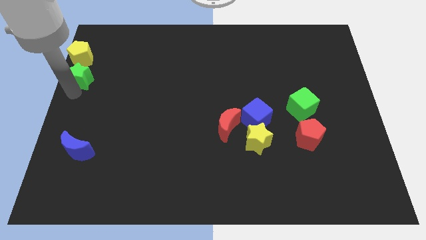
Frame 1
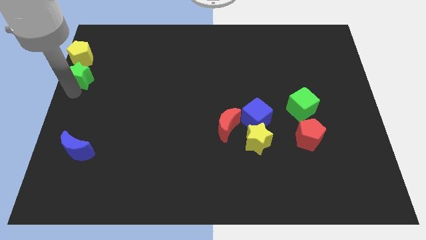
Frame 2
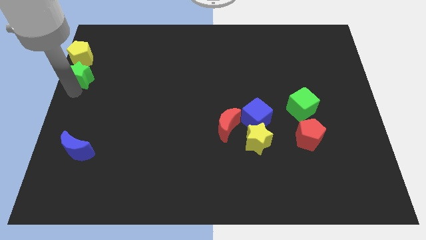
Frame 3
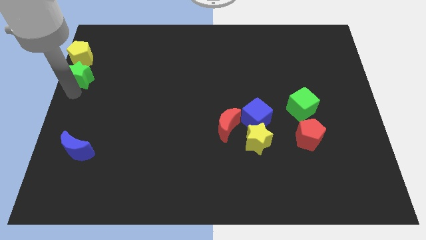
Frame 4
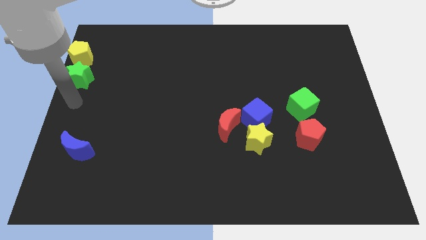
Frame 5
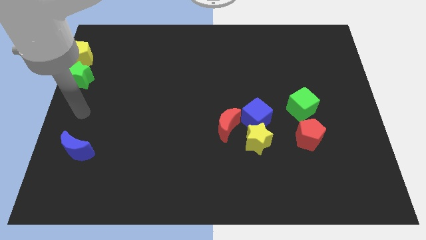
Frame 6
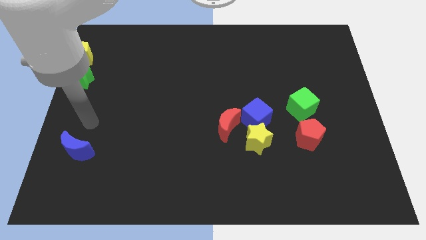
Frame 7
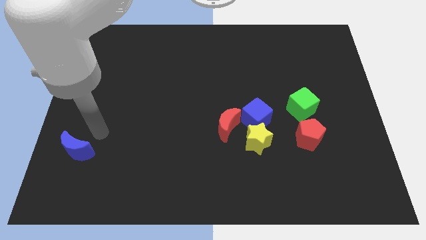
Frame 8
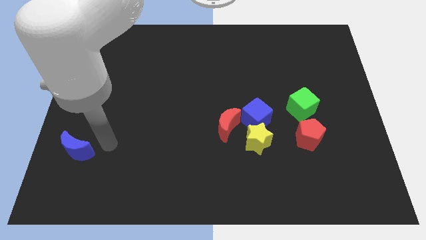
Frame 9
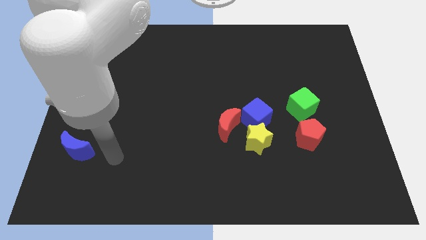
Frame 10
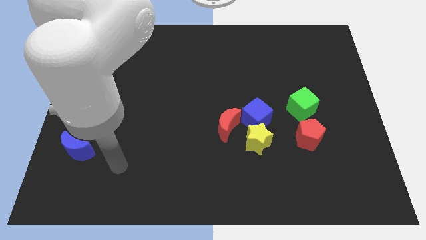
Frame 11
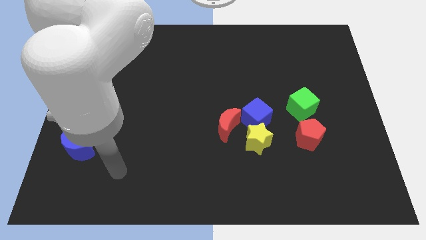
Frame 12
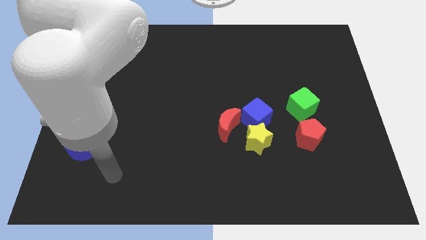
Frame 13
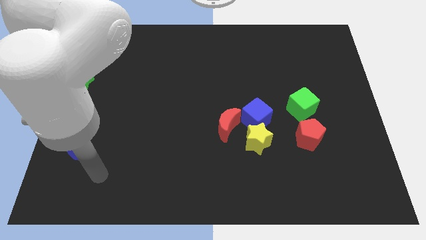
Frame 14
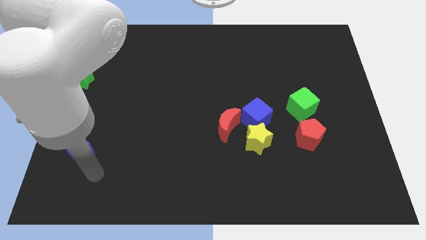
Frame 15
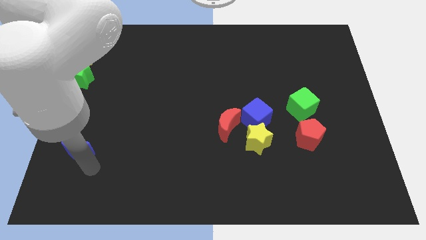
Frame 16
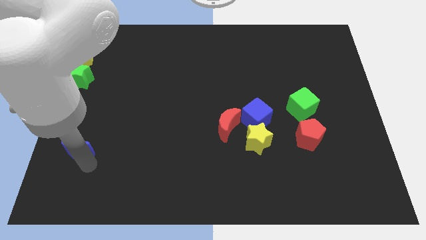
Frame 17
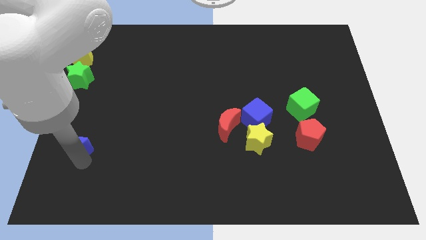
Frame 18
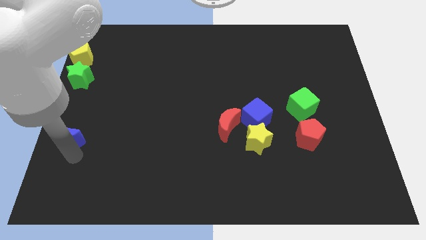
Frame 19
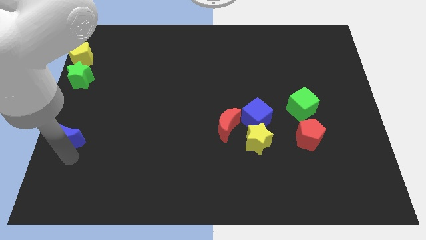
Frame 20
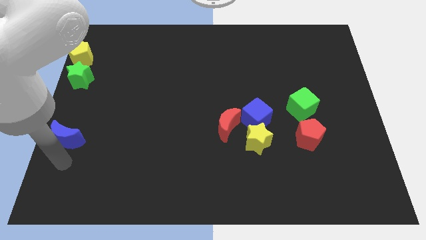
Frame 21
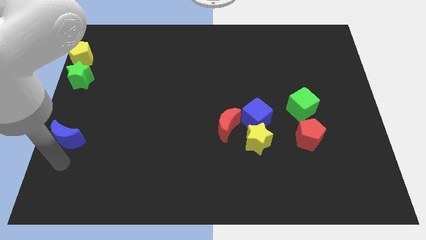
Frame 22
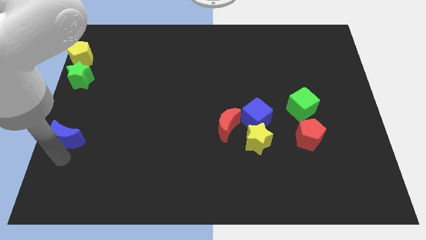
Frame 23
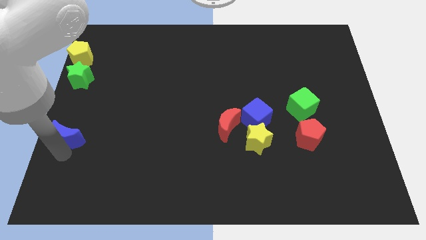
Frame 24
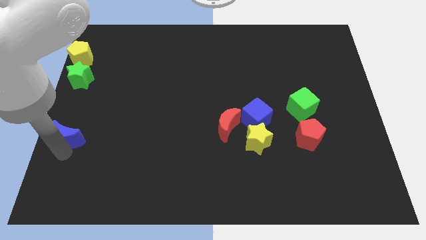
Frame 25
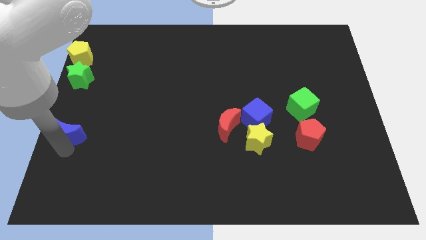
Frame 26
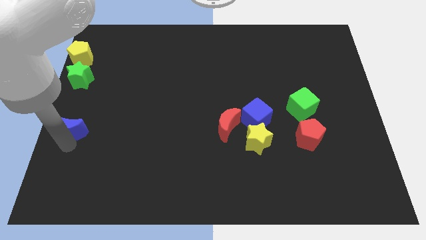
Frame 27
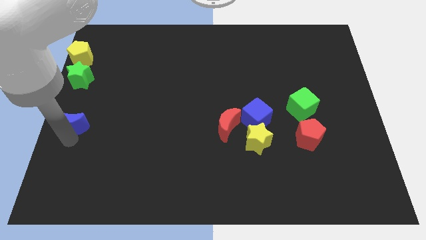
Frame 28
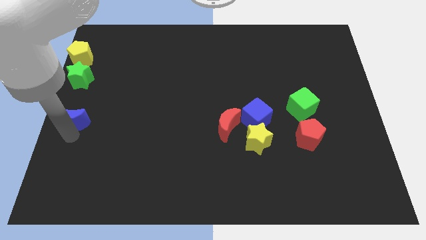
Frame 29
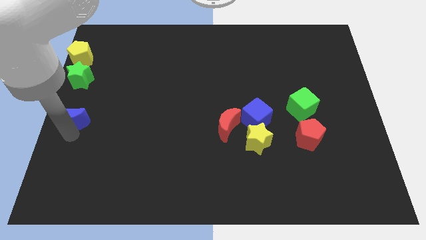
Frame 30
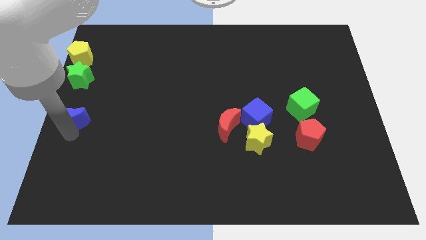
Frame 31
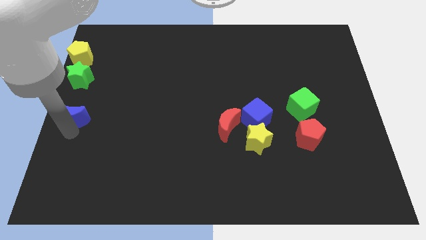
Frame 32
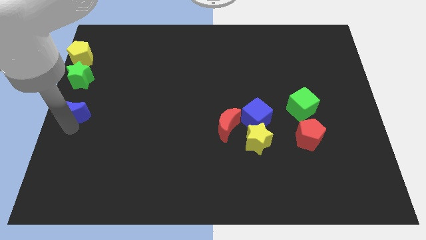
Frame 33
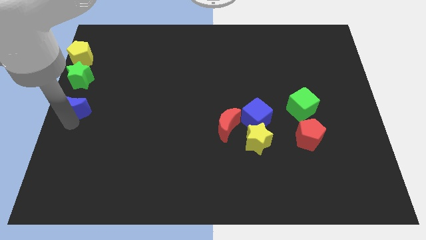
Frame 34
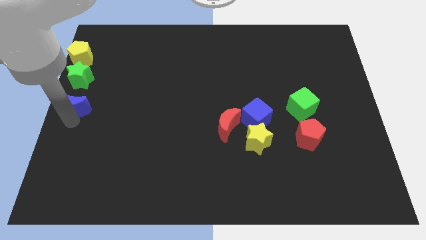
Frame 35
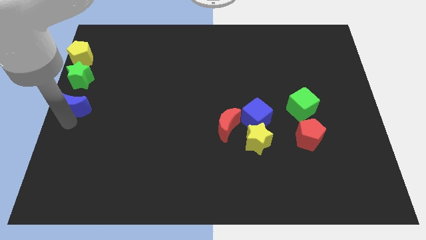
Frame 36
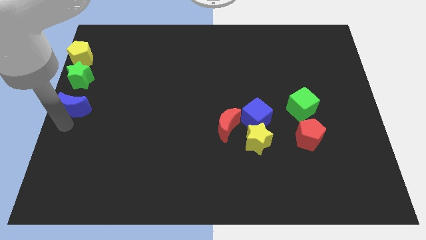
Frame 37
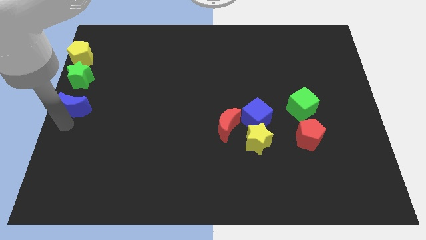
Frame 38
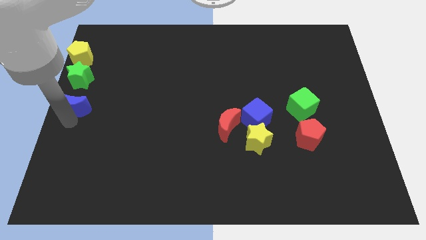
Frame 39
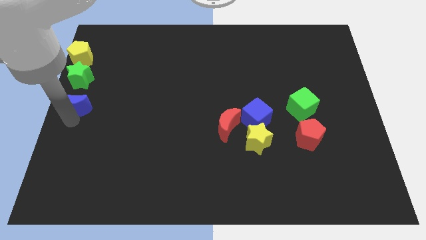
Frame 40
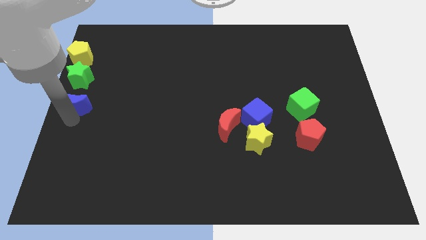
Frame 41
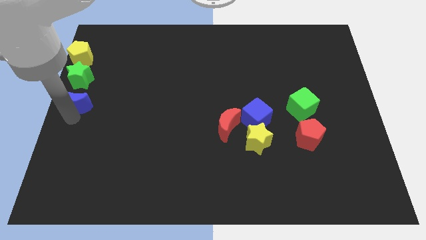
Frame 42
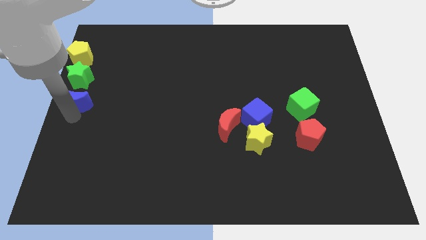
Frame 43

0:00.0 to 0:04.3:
place the blue crescent below the green star

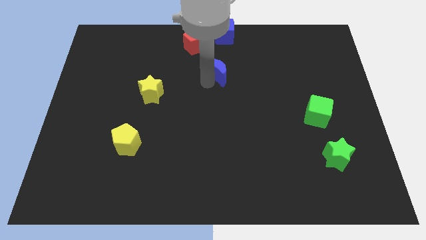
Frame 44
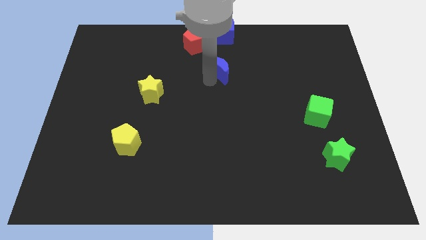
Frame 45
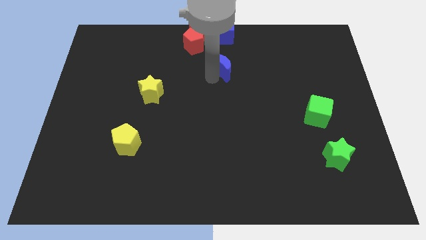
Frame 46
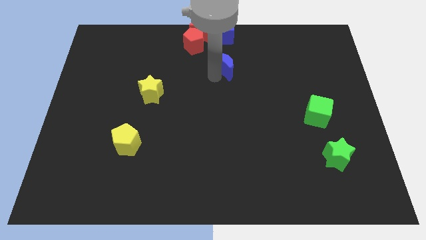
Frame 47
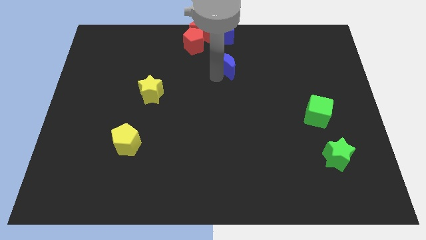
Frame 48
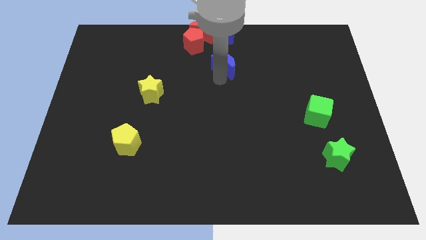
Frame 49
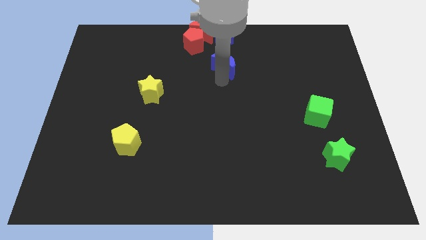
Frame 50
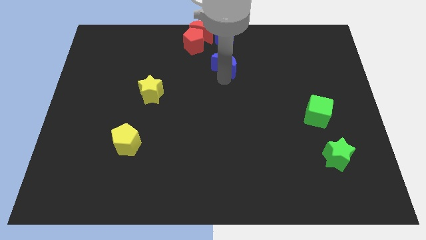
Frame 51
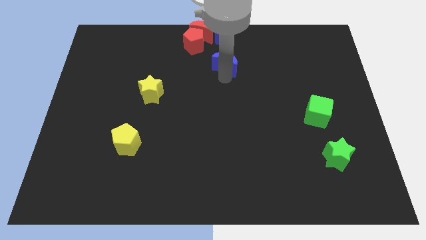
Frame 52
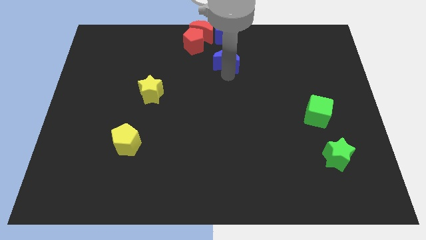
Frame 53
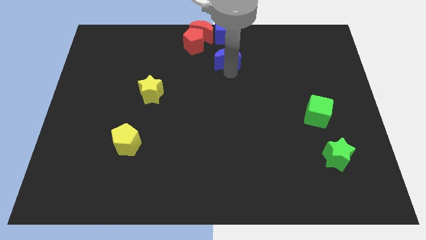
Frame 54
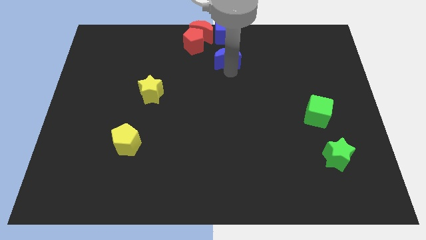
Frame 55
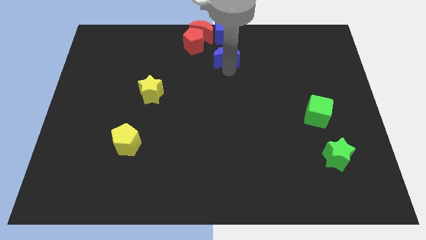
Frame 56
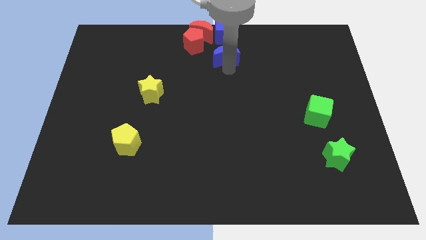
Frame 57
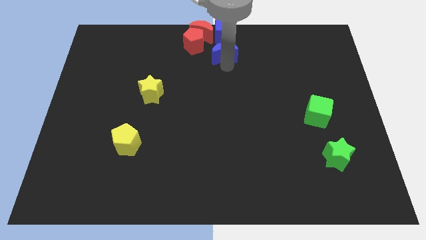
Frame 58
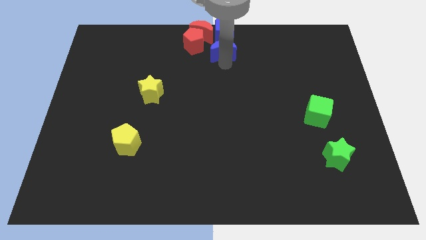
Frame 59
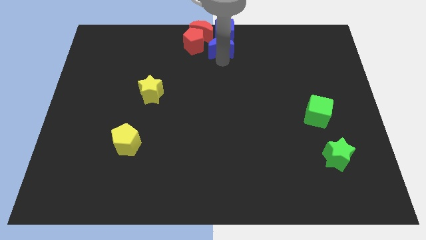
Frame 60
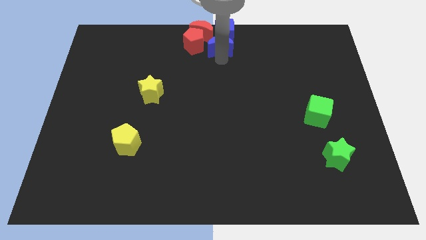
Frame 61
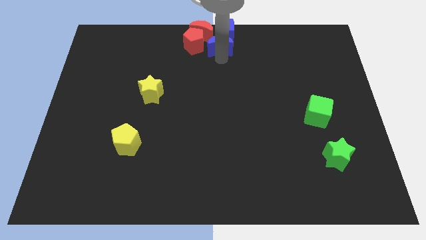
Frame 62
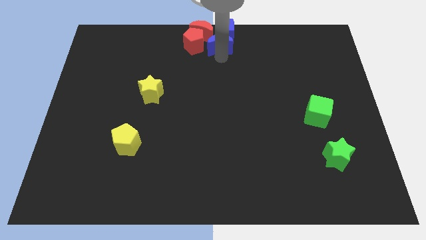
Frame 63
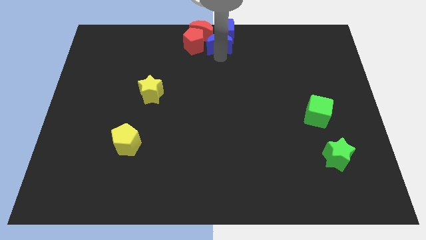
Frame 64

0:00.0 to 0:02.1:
push blue crescent to the bottom of blue cube

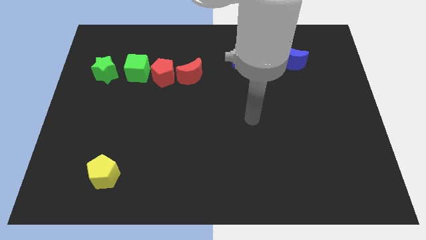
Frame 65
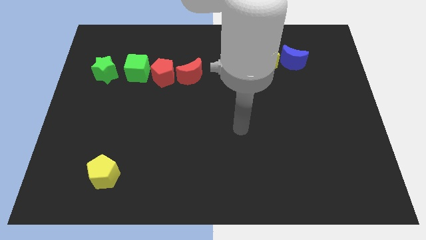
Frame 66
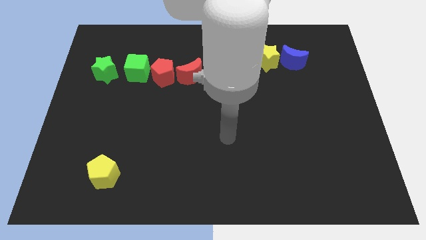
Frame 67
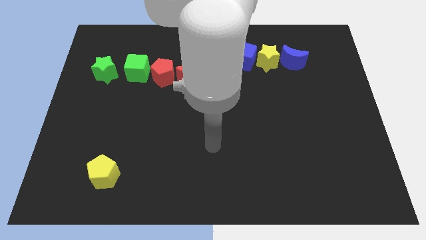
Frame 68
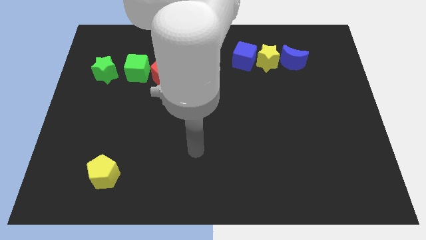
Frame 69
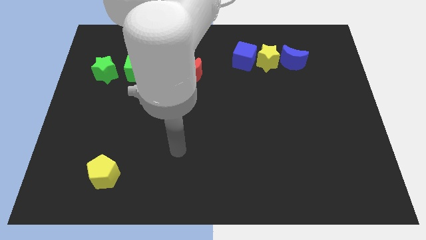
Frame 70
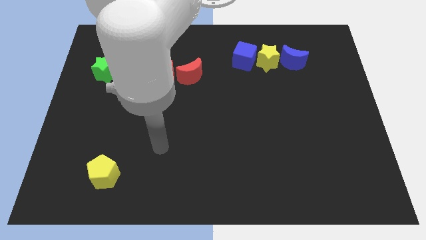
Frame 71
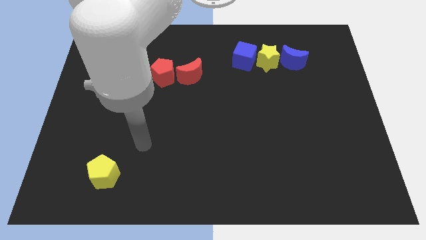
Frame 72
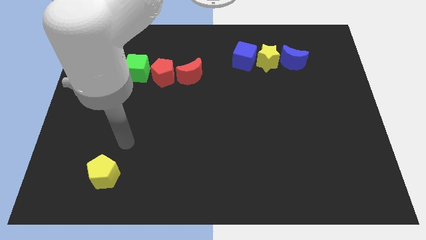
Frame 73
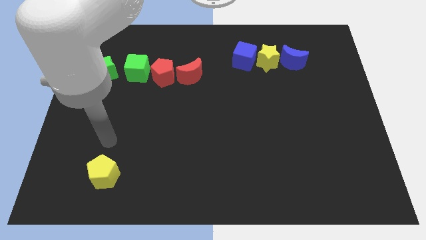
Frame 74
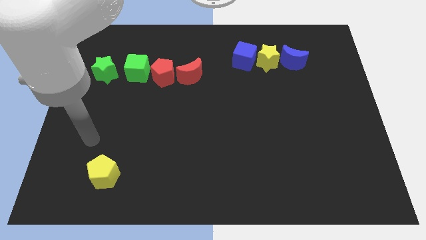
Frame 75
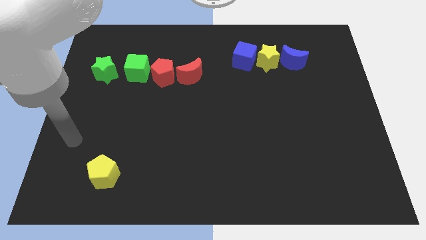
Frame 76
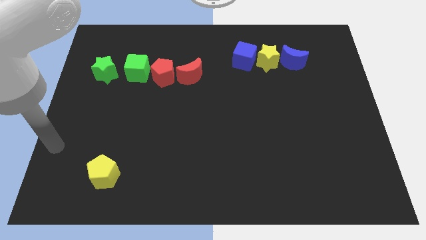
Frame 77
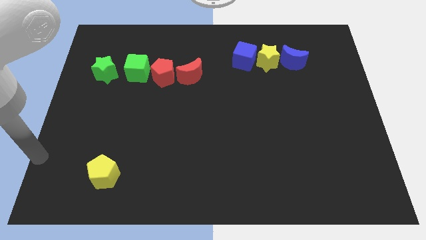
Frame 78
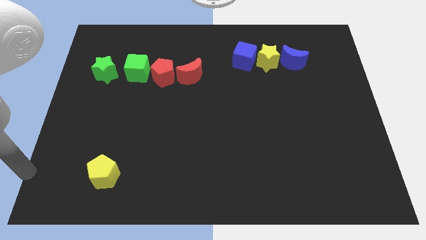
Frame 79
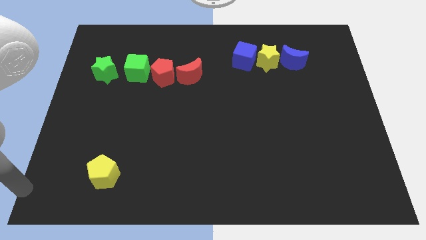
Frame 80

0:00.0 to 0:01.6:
point your arm at the bottom left corner of the board

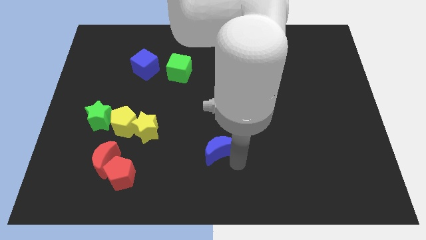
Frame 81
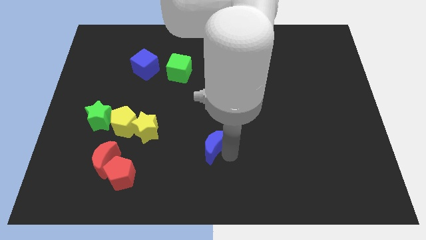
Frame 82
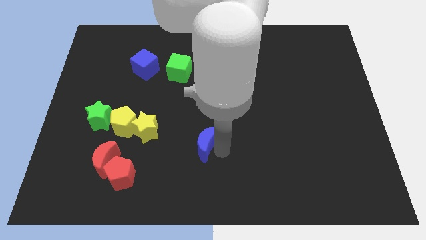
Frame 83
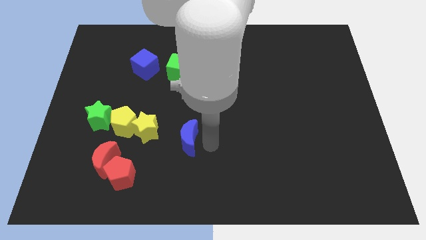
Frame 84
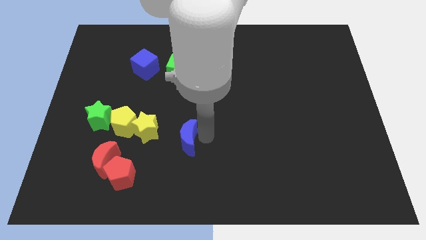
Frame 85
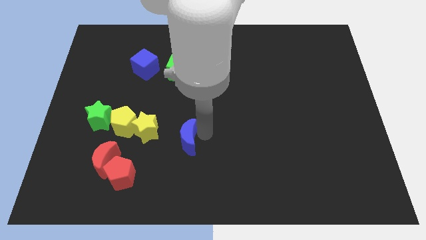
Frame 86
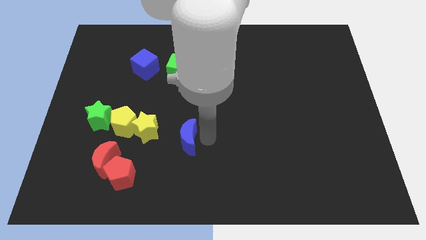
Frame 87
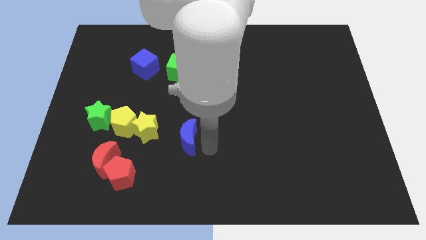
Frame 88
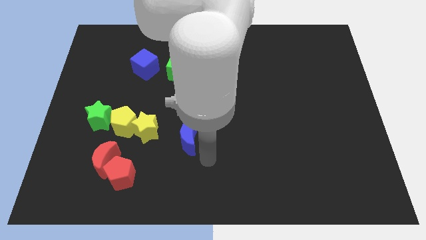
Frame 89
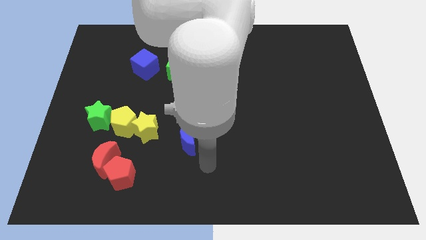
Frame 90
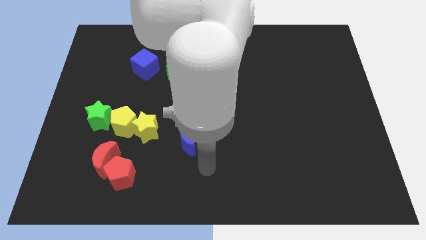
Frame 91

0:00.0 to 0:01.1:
place the blue crescent right to the yellow star
